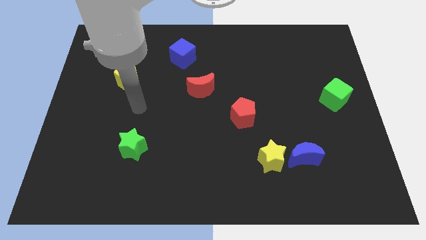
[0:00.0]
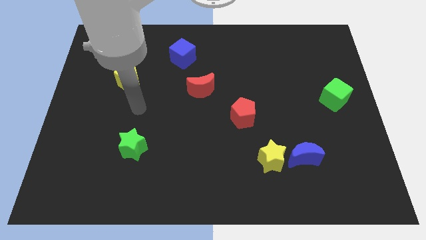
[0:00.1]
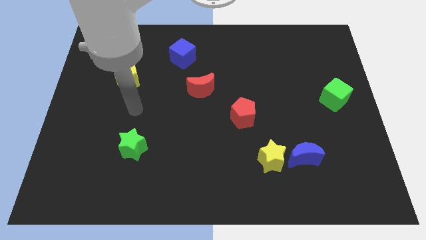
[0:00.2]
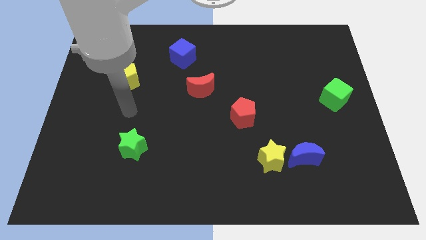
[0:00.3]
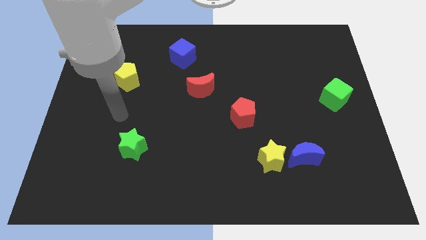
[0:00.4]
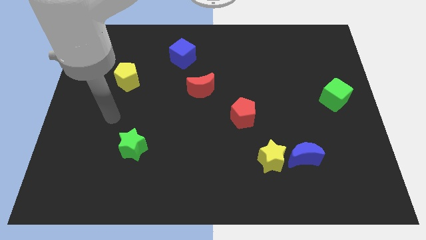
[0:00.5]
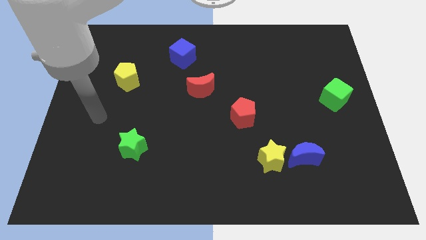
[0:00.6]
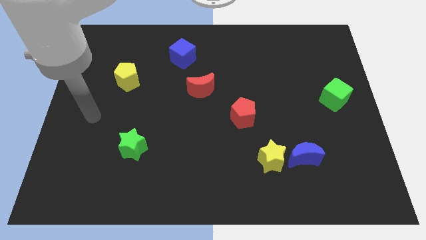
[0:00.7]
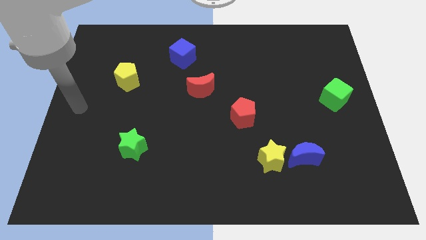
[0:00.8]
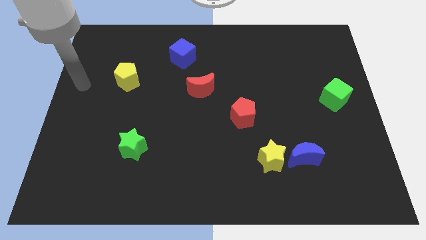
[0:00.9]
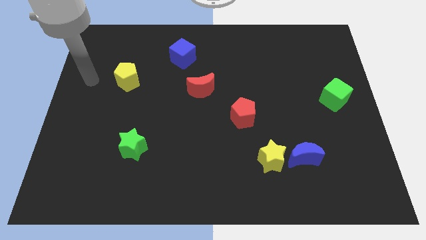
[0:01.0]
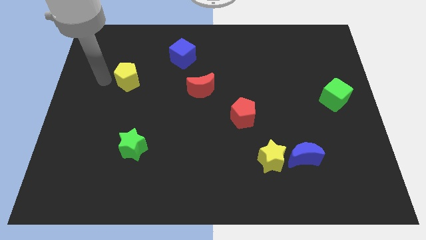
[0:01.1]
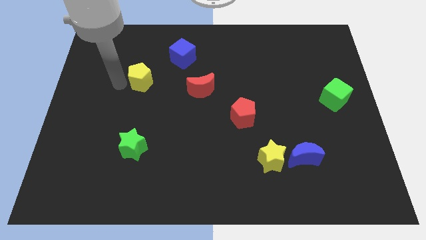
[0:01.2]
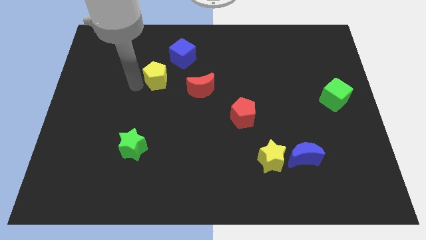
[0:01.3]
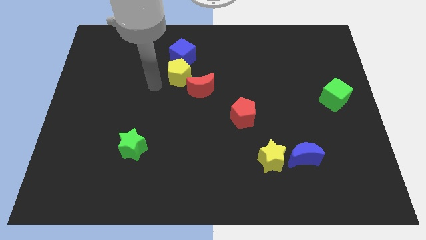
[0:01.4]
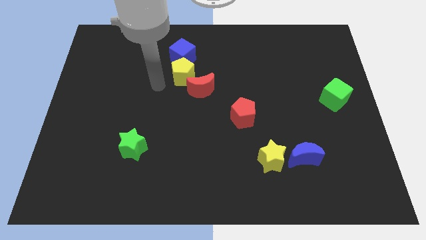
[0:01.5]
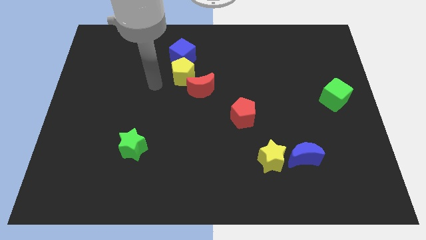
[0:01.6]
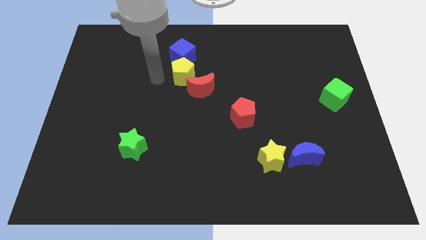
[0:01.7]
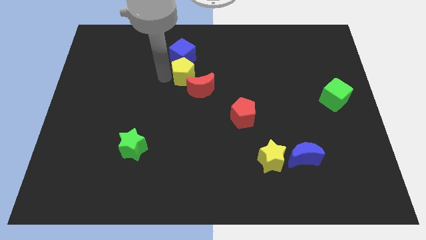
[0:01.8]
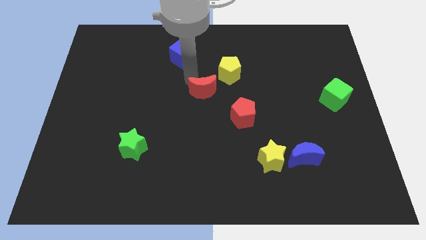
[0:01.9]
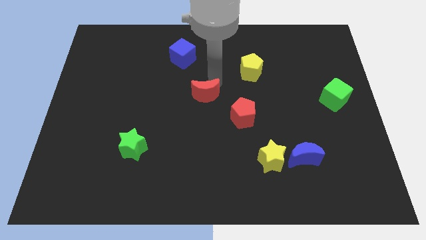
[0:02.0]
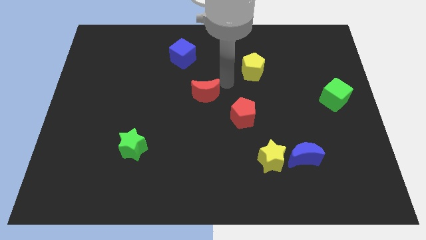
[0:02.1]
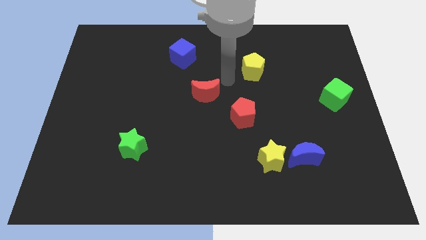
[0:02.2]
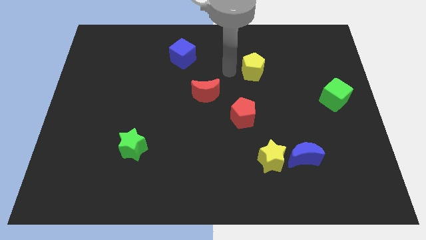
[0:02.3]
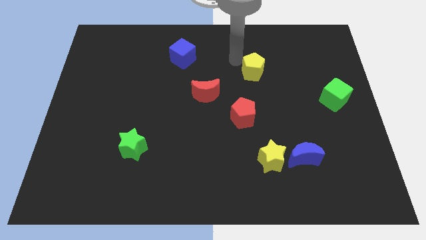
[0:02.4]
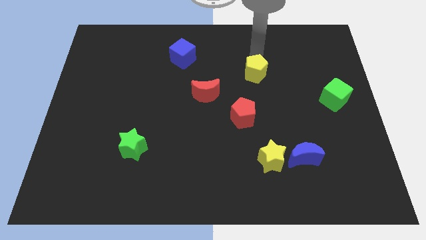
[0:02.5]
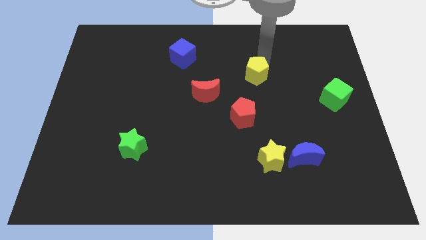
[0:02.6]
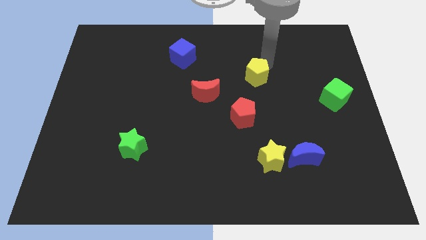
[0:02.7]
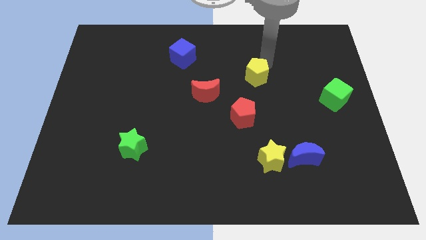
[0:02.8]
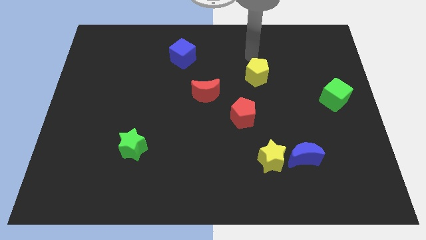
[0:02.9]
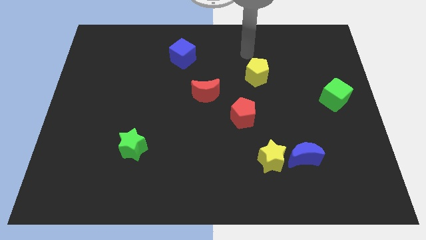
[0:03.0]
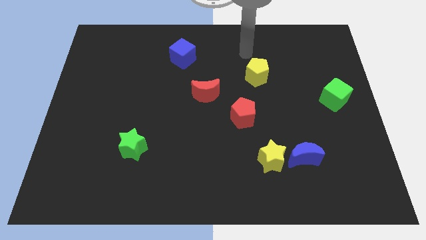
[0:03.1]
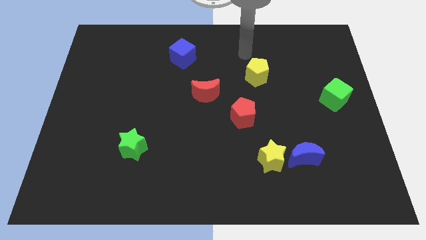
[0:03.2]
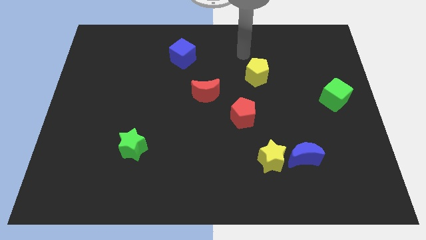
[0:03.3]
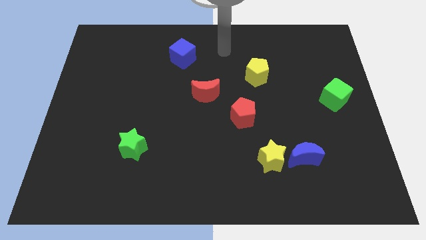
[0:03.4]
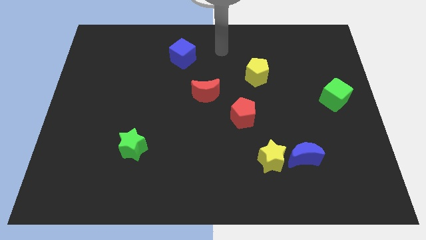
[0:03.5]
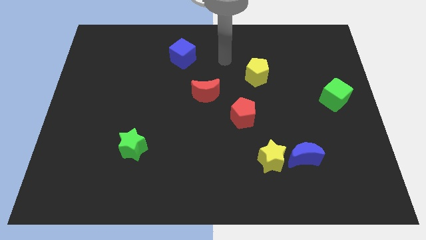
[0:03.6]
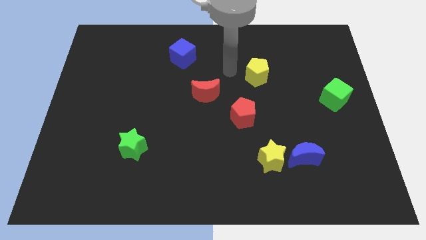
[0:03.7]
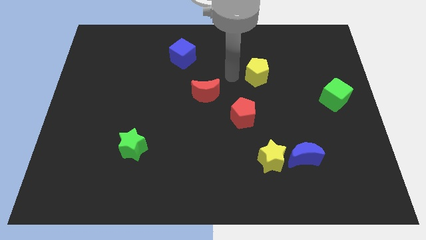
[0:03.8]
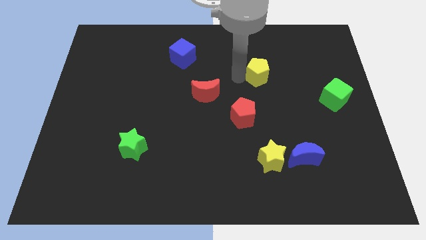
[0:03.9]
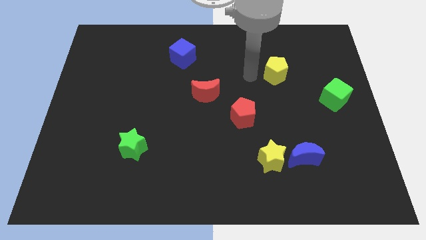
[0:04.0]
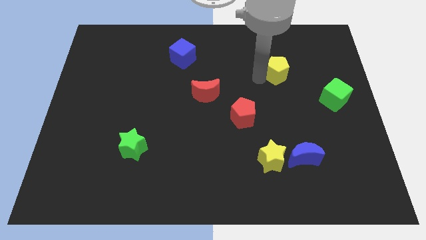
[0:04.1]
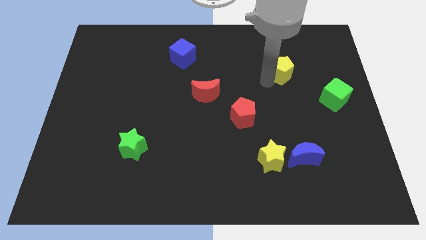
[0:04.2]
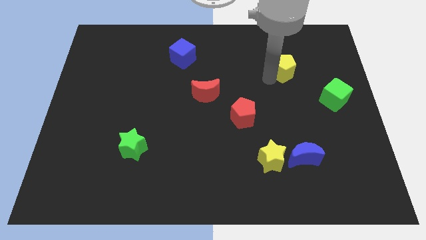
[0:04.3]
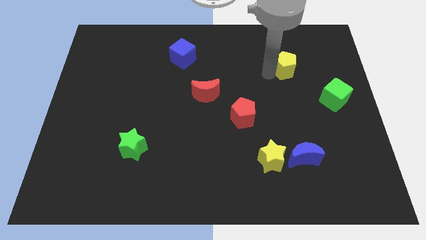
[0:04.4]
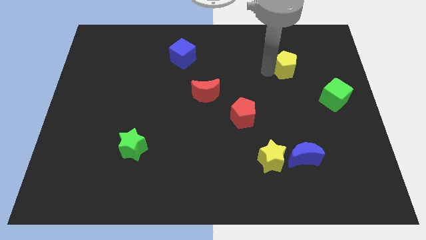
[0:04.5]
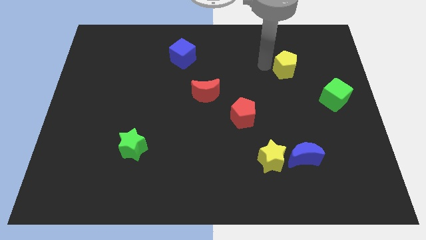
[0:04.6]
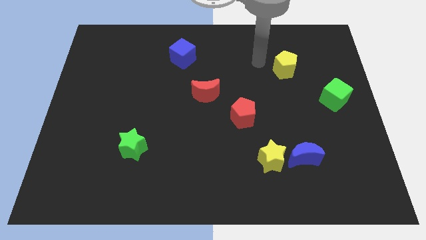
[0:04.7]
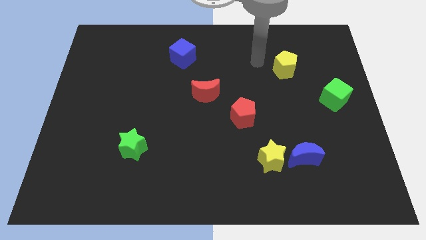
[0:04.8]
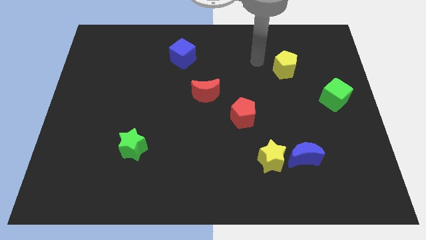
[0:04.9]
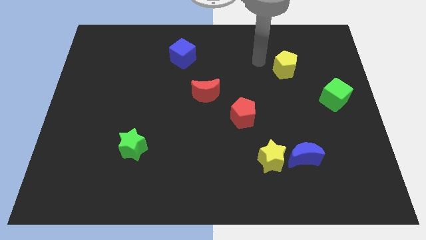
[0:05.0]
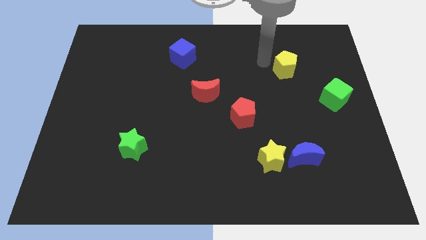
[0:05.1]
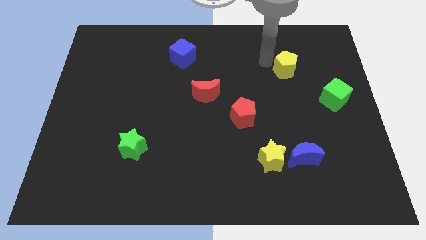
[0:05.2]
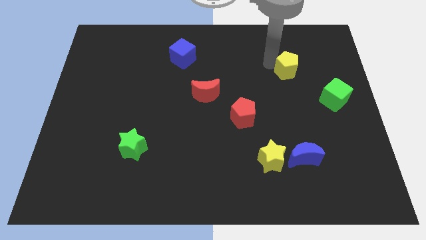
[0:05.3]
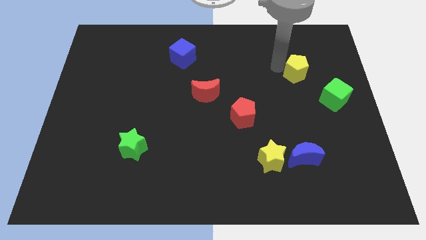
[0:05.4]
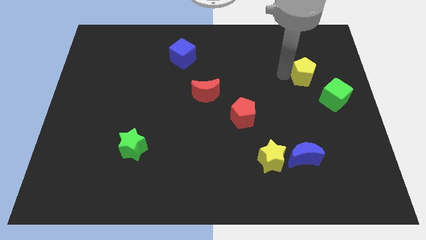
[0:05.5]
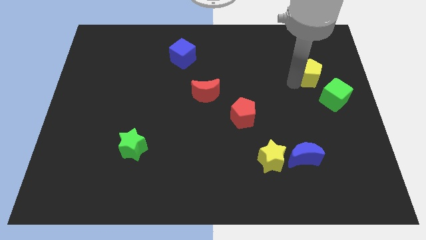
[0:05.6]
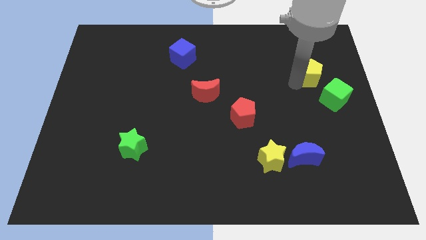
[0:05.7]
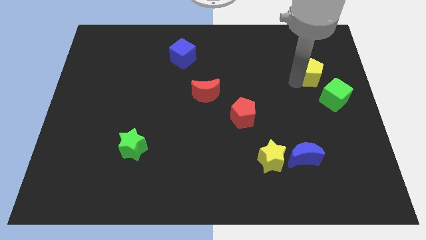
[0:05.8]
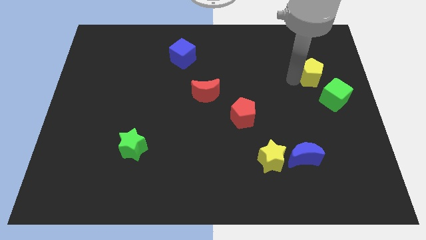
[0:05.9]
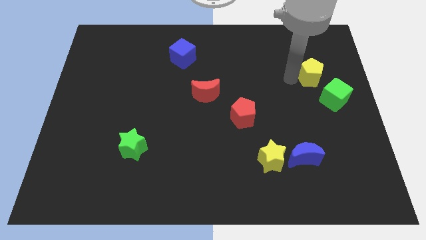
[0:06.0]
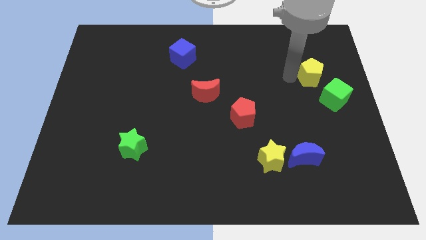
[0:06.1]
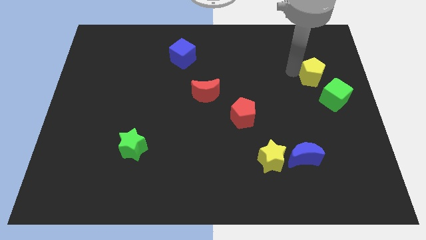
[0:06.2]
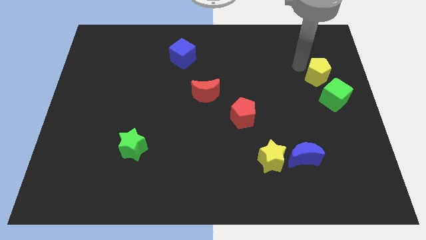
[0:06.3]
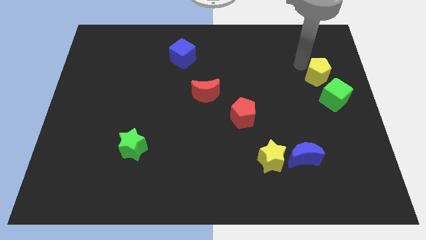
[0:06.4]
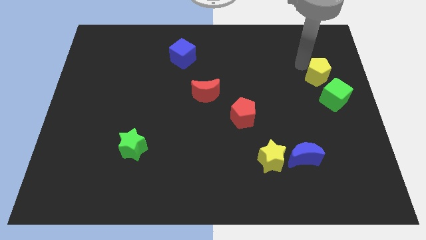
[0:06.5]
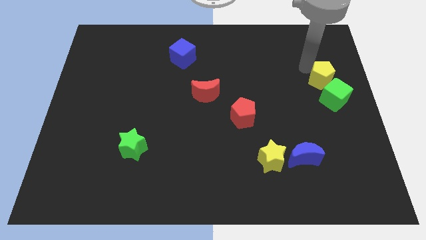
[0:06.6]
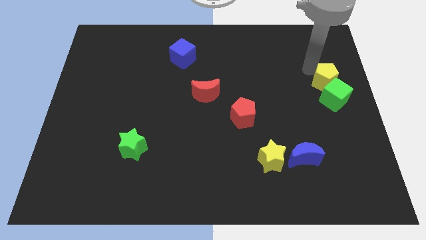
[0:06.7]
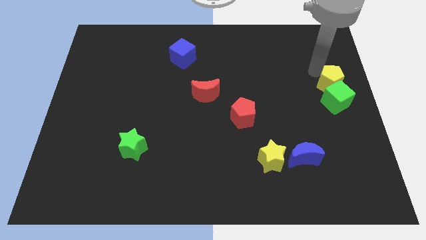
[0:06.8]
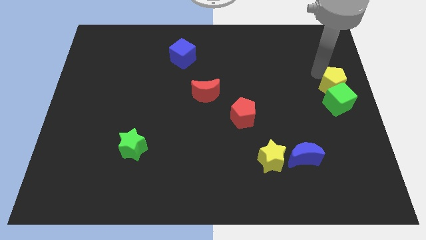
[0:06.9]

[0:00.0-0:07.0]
push the yellow pentagon close to the green cube

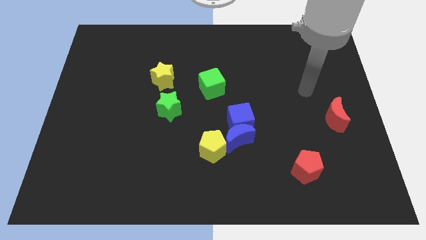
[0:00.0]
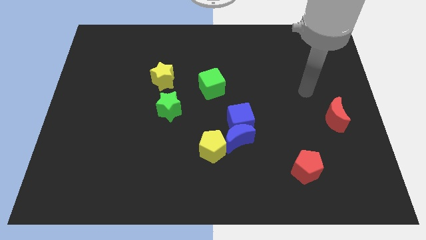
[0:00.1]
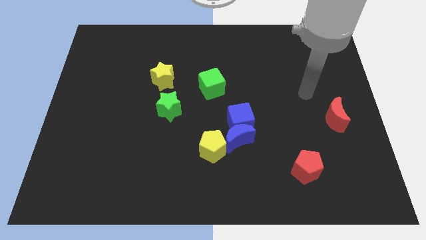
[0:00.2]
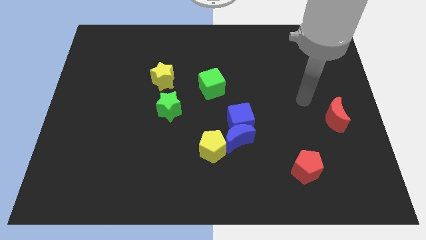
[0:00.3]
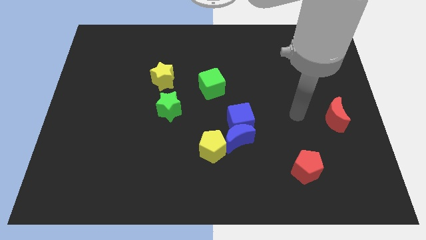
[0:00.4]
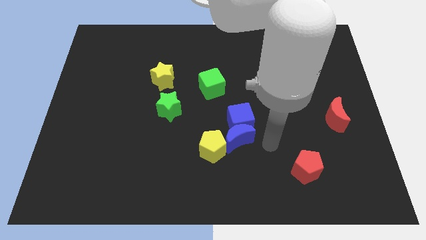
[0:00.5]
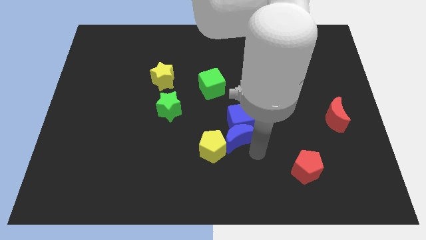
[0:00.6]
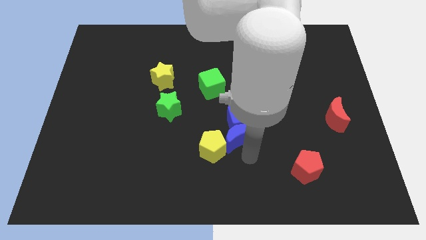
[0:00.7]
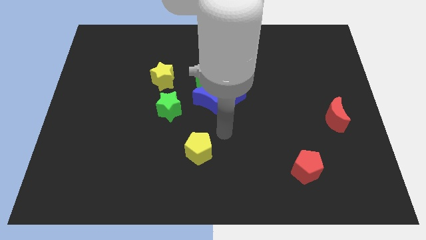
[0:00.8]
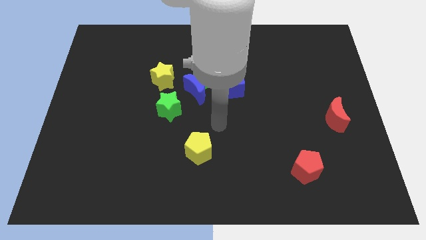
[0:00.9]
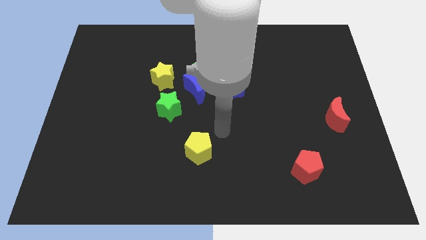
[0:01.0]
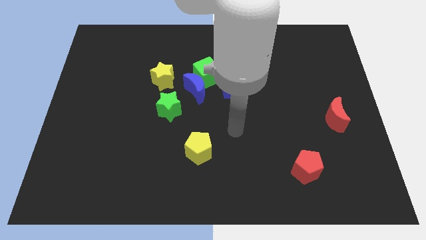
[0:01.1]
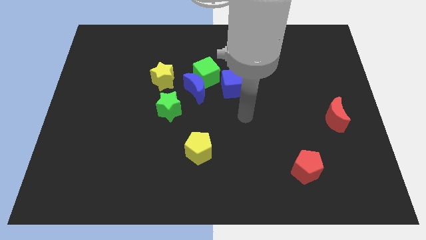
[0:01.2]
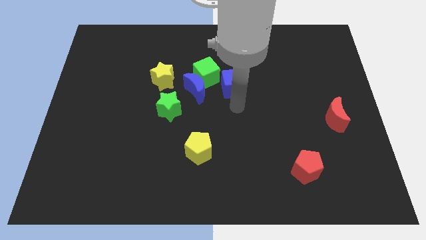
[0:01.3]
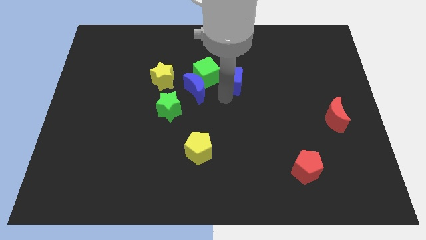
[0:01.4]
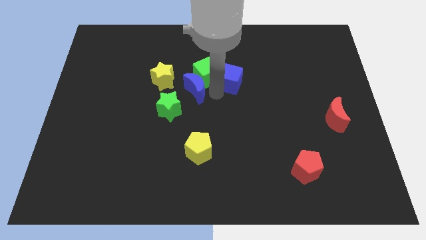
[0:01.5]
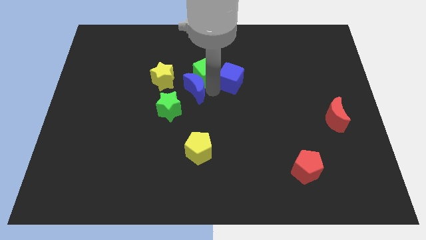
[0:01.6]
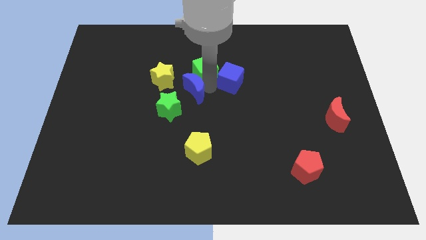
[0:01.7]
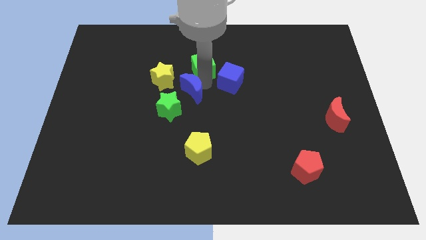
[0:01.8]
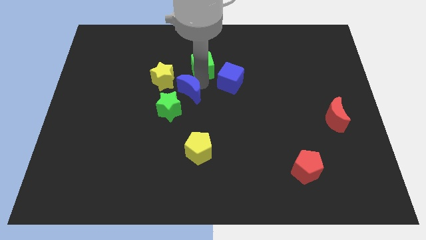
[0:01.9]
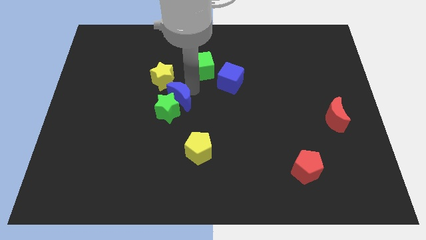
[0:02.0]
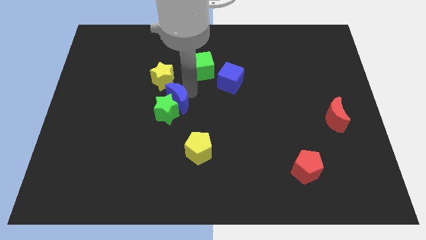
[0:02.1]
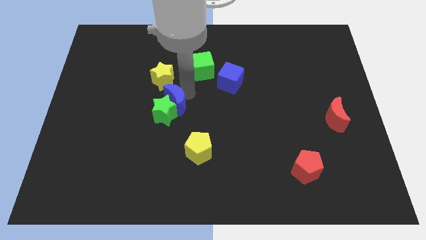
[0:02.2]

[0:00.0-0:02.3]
push the blue moon to the green star
